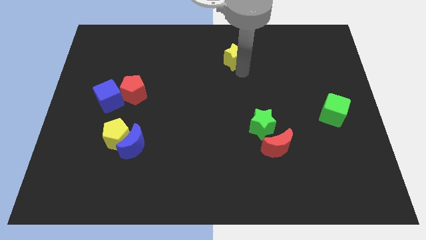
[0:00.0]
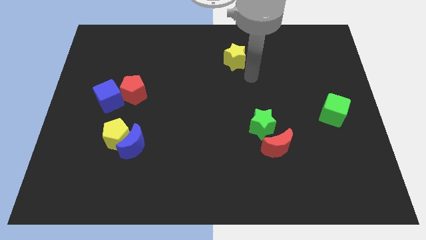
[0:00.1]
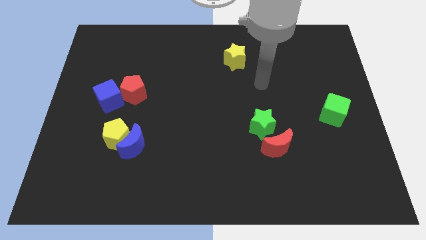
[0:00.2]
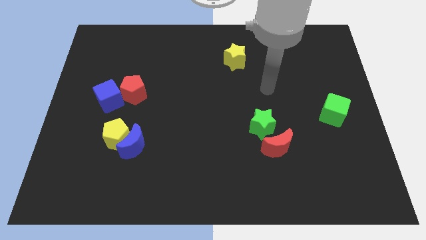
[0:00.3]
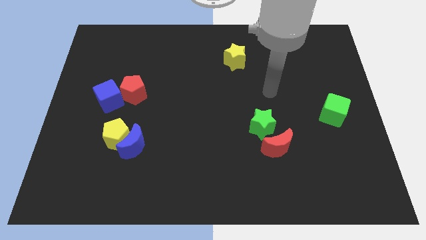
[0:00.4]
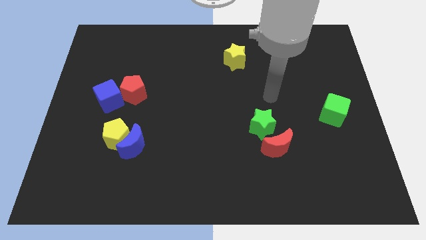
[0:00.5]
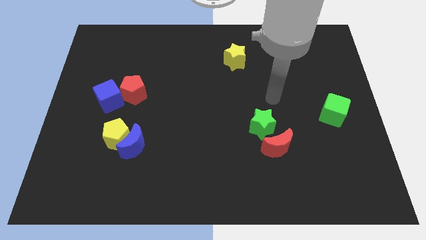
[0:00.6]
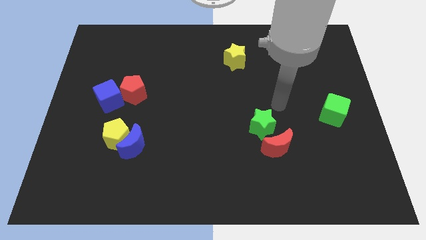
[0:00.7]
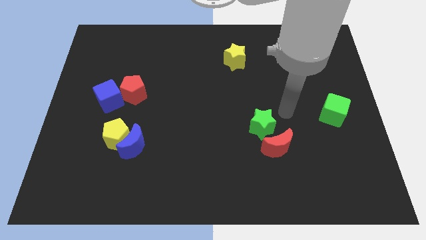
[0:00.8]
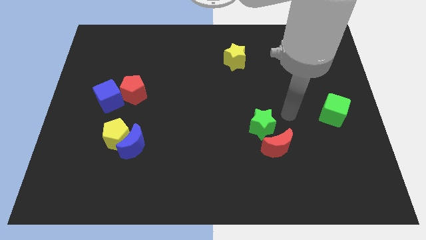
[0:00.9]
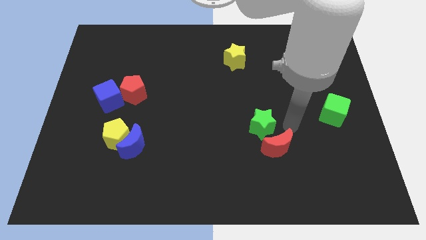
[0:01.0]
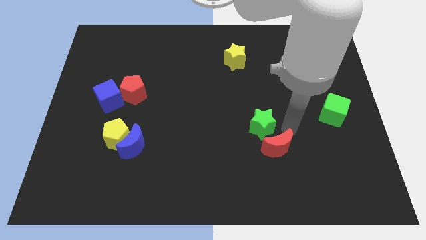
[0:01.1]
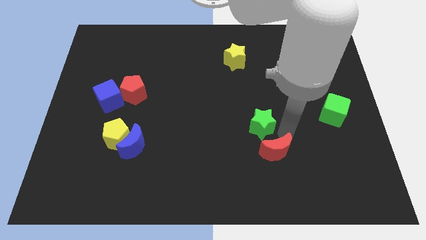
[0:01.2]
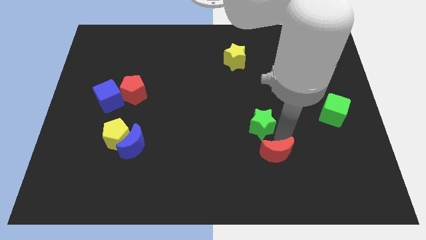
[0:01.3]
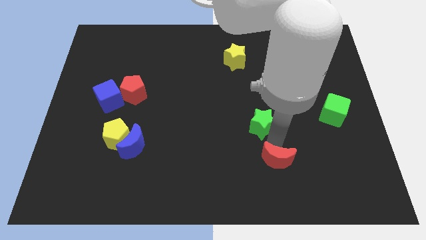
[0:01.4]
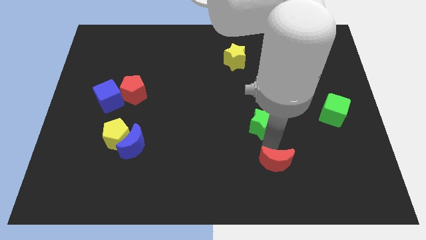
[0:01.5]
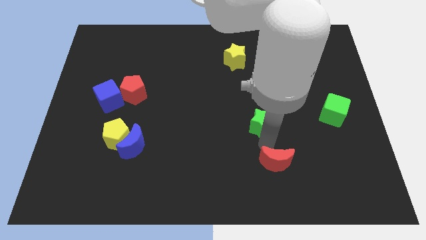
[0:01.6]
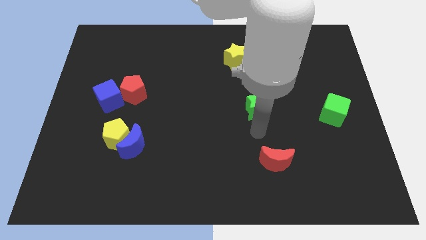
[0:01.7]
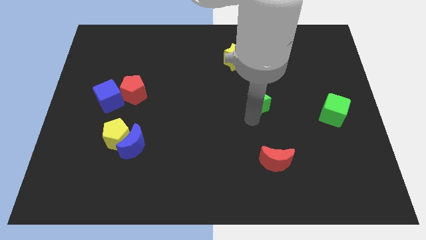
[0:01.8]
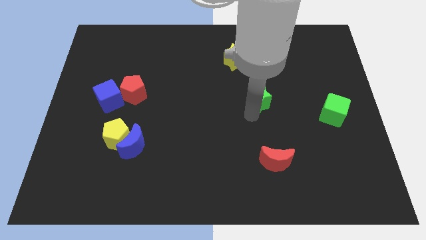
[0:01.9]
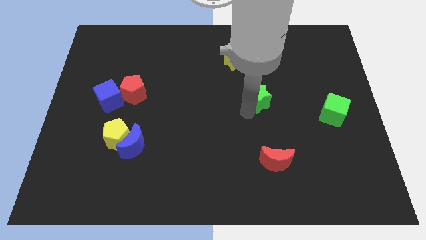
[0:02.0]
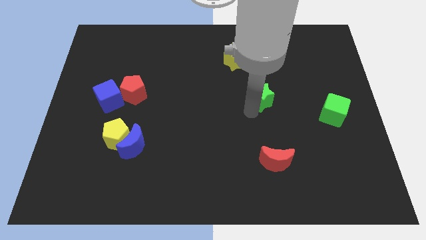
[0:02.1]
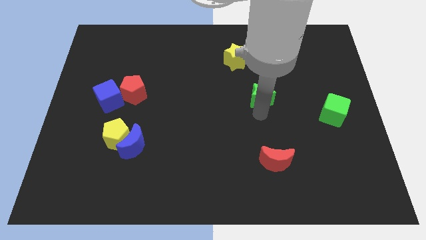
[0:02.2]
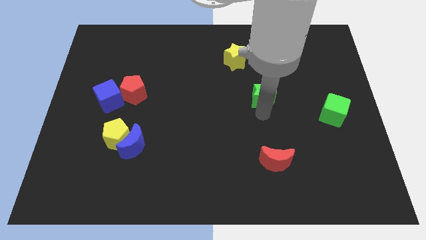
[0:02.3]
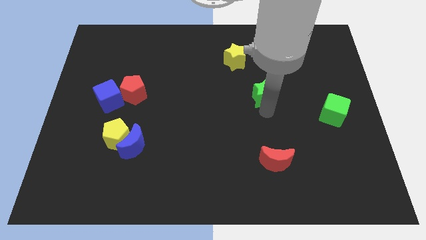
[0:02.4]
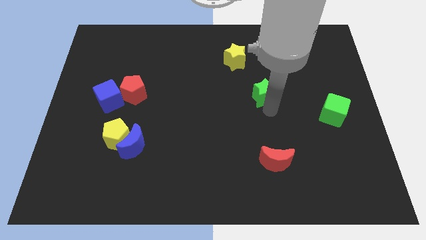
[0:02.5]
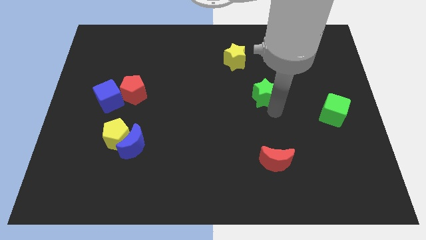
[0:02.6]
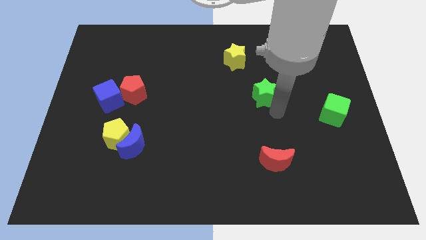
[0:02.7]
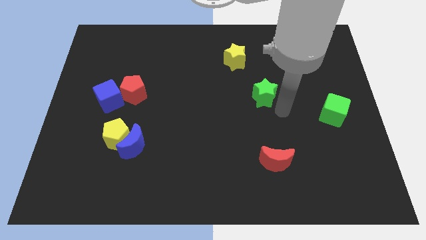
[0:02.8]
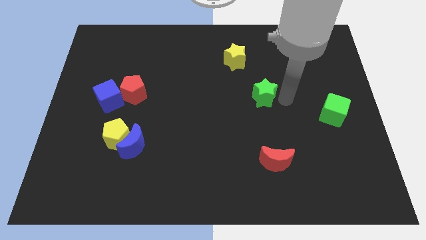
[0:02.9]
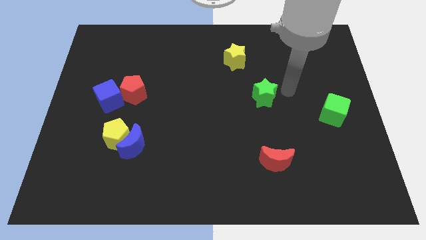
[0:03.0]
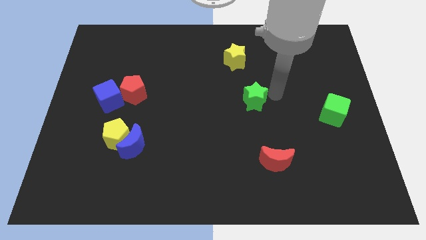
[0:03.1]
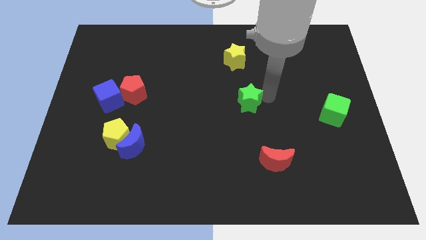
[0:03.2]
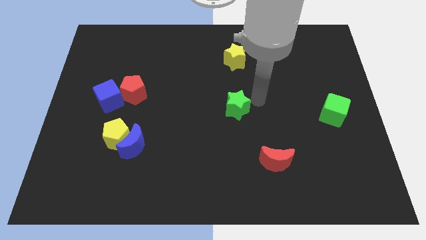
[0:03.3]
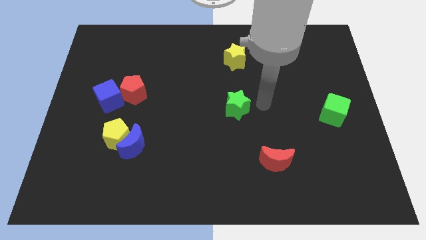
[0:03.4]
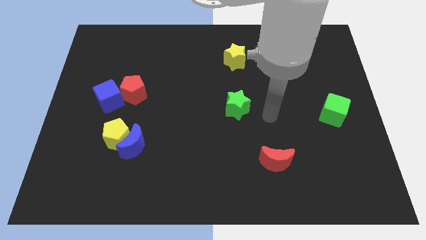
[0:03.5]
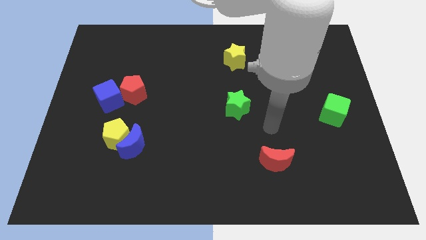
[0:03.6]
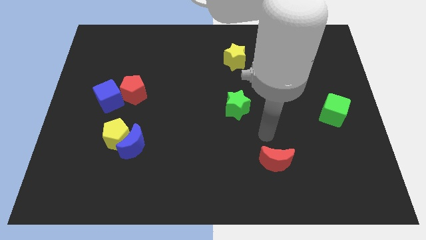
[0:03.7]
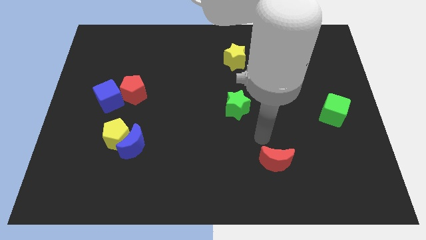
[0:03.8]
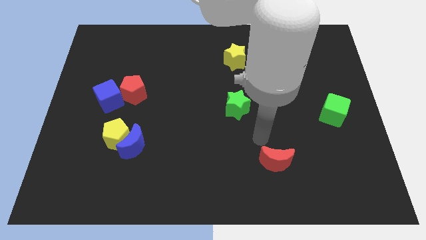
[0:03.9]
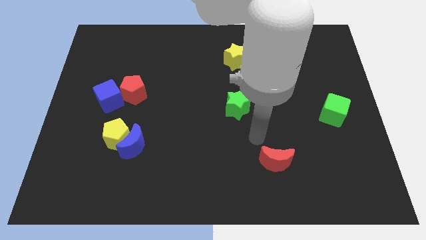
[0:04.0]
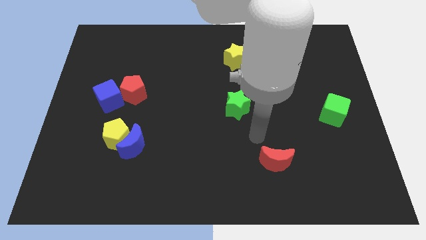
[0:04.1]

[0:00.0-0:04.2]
move your arm away from the yellow star

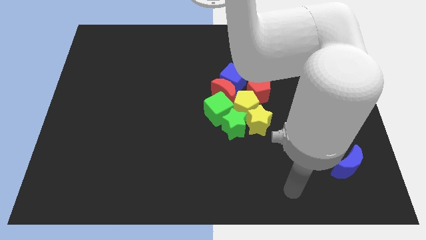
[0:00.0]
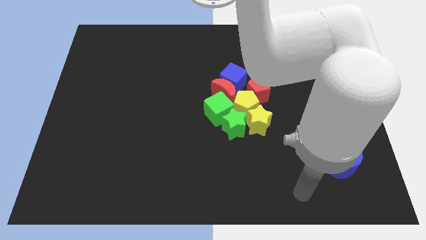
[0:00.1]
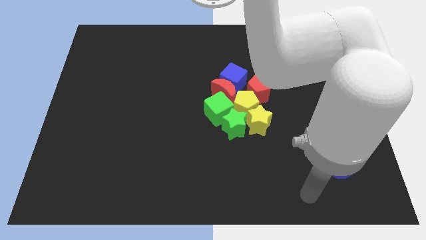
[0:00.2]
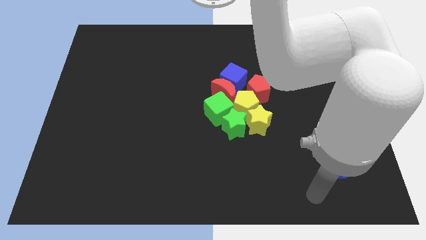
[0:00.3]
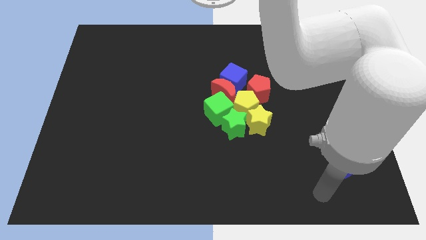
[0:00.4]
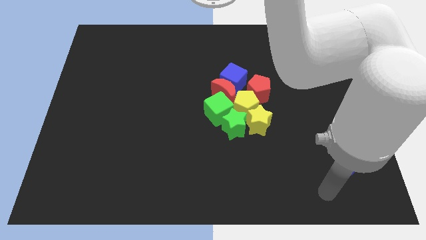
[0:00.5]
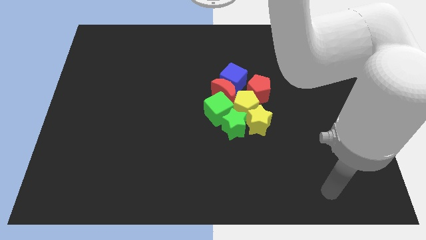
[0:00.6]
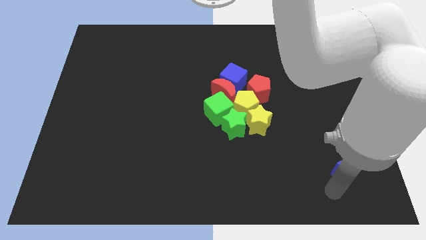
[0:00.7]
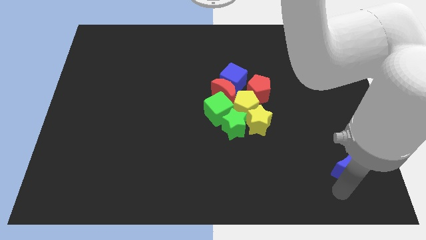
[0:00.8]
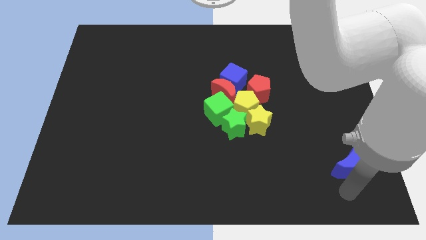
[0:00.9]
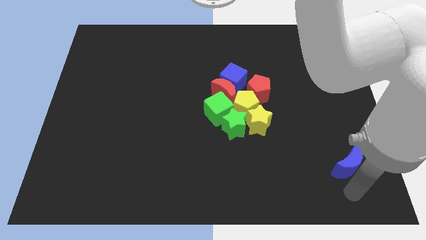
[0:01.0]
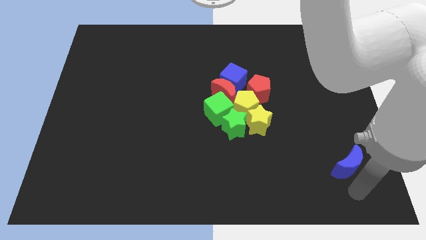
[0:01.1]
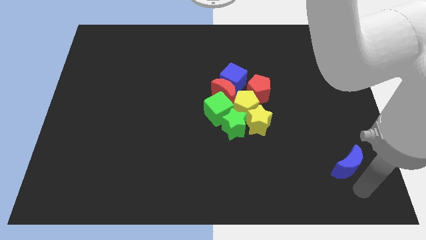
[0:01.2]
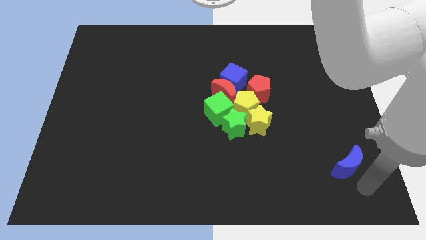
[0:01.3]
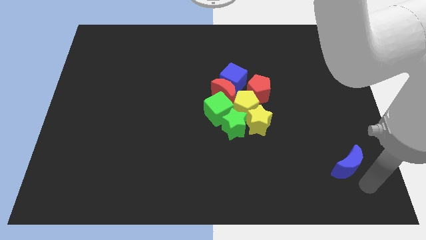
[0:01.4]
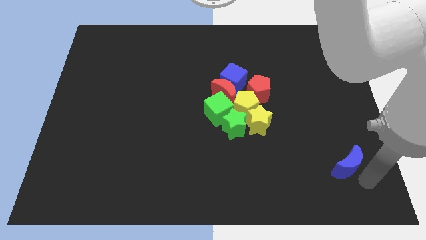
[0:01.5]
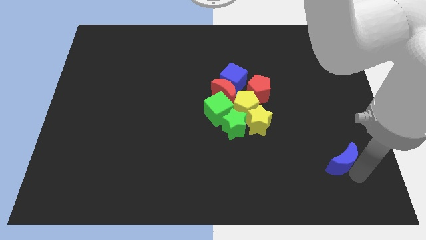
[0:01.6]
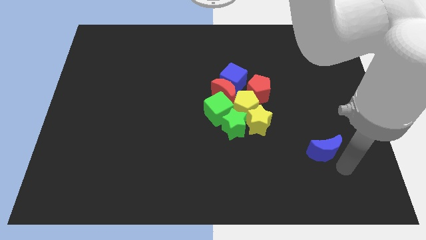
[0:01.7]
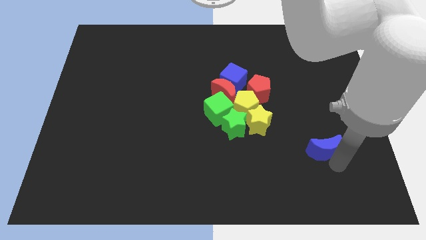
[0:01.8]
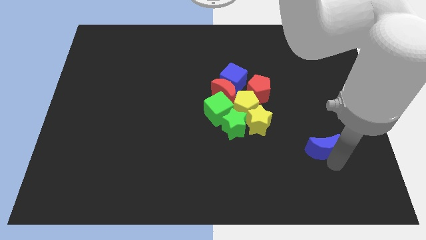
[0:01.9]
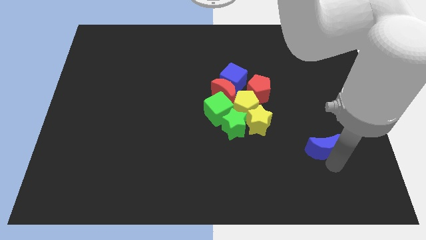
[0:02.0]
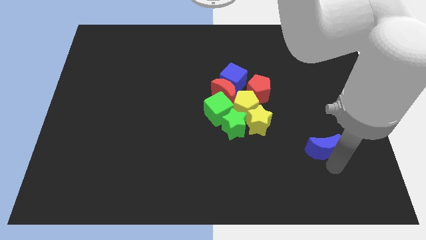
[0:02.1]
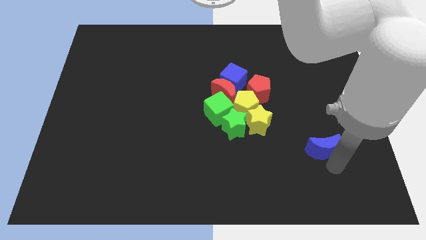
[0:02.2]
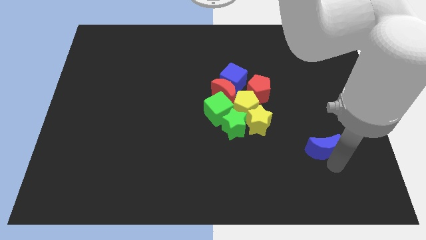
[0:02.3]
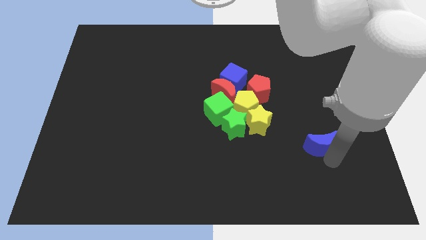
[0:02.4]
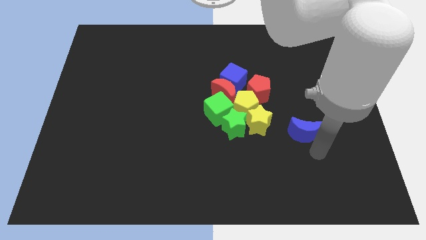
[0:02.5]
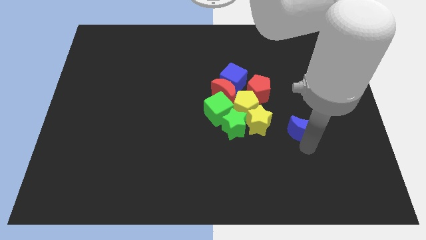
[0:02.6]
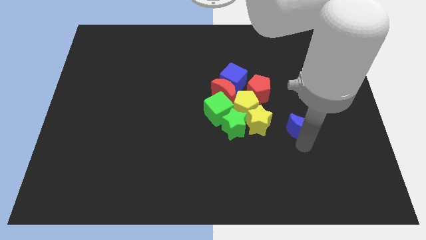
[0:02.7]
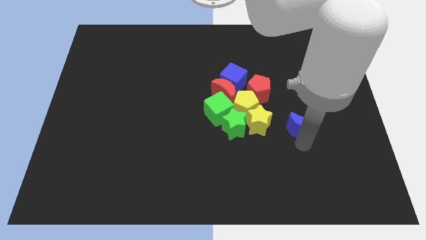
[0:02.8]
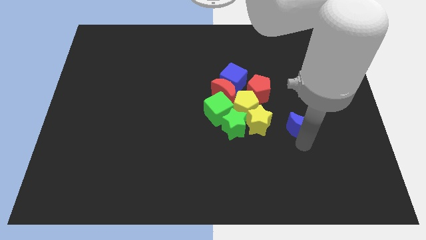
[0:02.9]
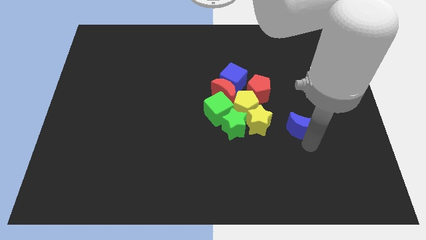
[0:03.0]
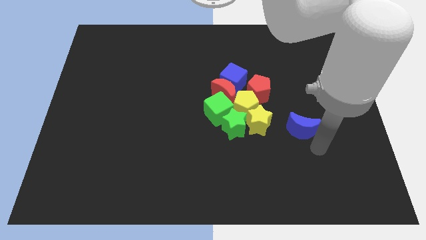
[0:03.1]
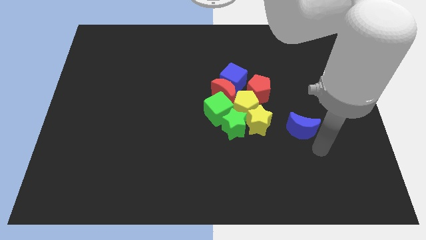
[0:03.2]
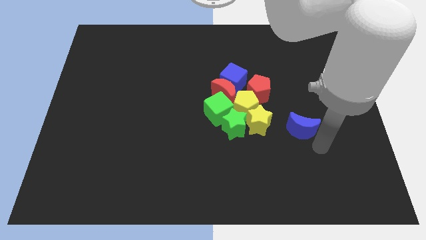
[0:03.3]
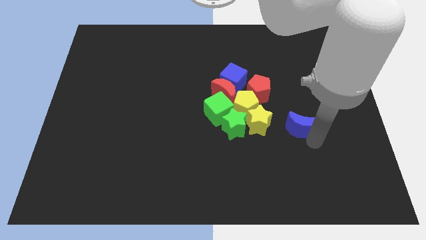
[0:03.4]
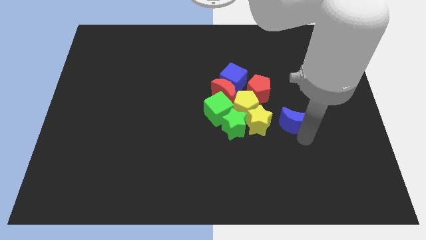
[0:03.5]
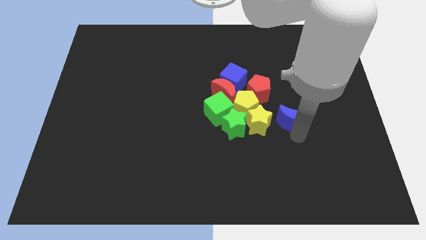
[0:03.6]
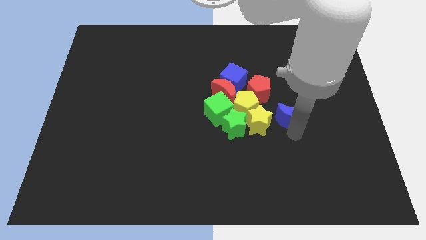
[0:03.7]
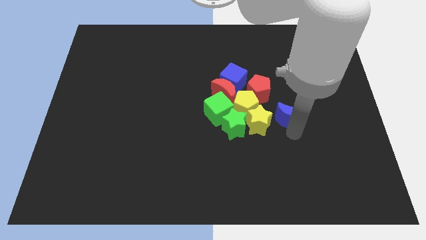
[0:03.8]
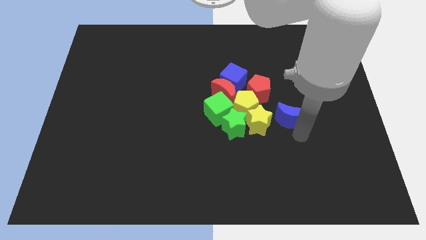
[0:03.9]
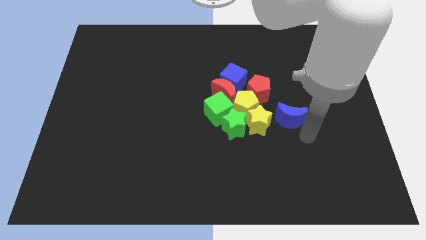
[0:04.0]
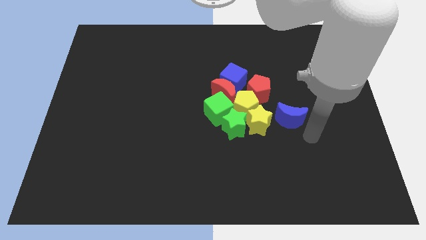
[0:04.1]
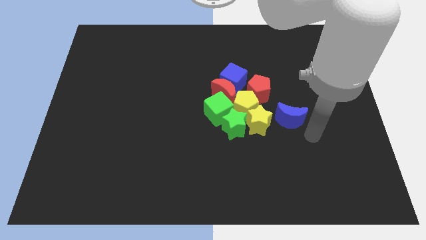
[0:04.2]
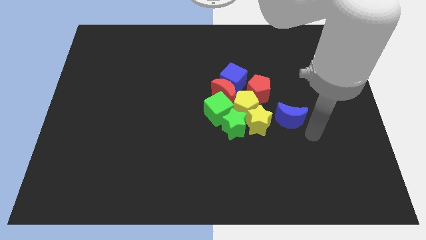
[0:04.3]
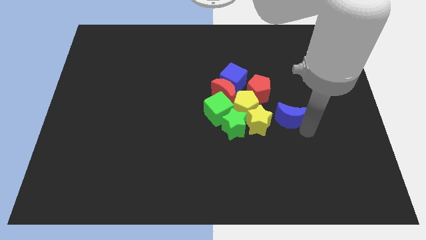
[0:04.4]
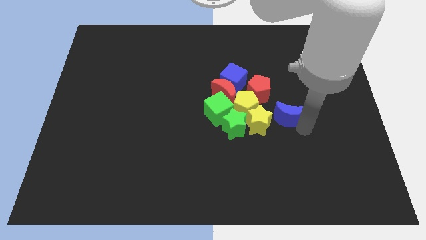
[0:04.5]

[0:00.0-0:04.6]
place blue moon to the top right of the yellow star

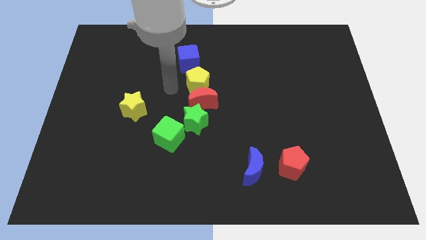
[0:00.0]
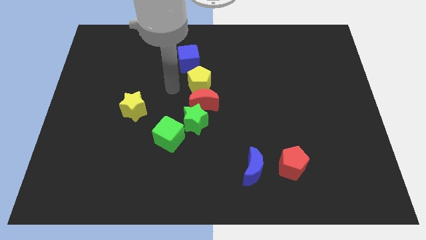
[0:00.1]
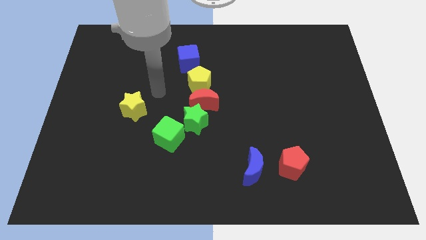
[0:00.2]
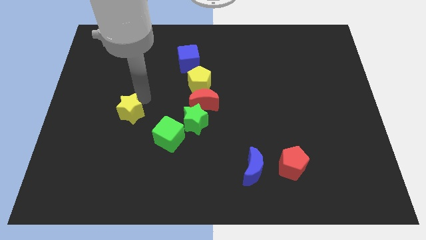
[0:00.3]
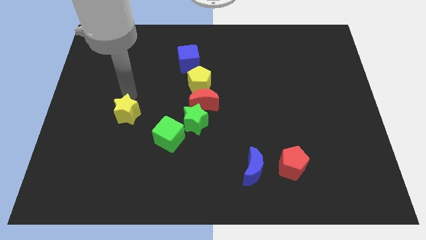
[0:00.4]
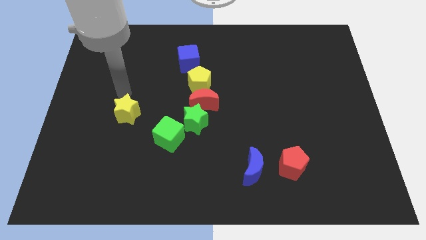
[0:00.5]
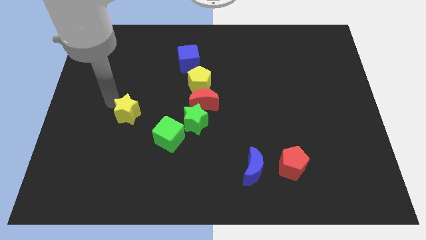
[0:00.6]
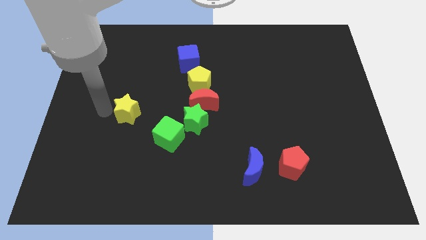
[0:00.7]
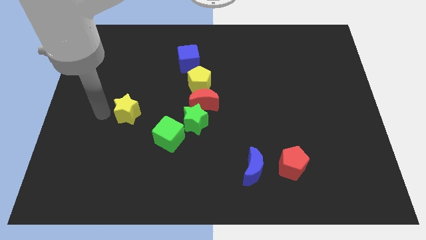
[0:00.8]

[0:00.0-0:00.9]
move your arm away from the yellow pentagon
